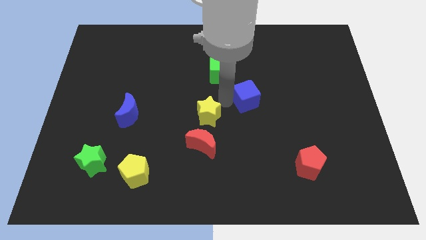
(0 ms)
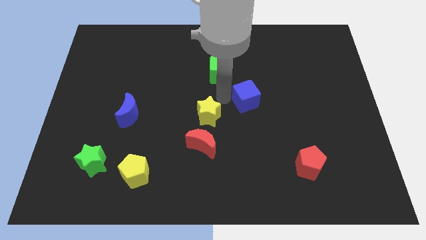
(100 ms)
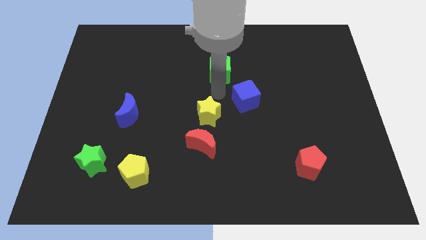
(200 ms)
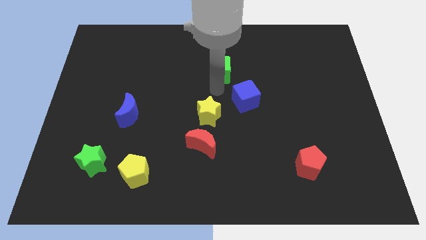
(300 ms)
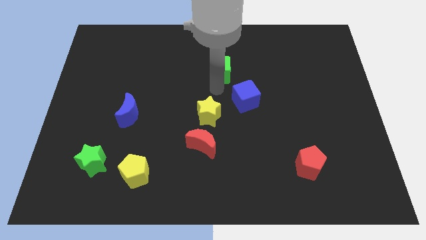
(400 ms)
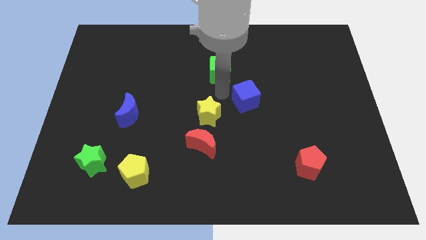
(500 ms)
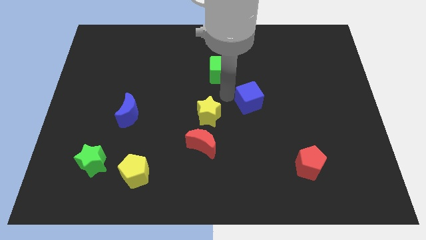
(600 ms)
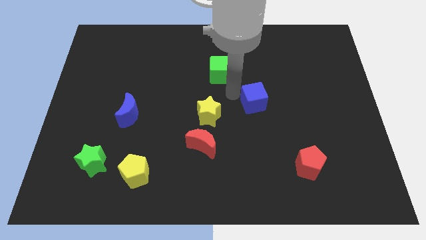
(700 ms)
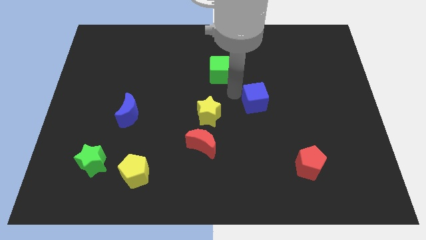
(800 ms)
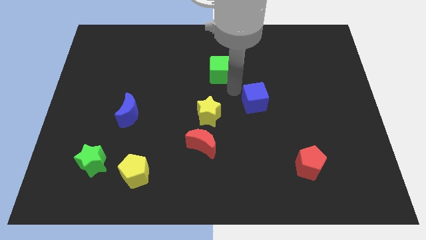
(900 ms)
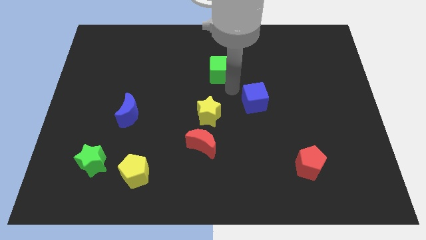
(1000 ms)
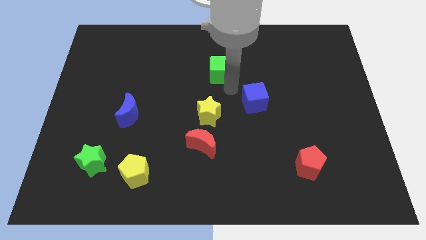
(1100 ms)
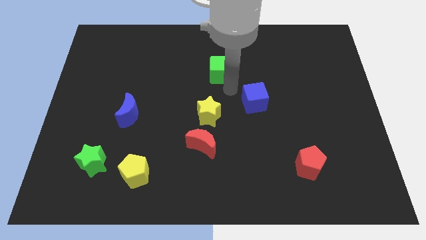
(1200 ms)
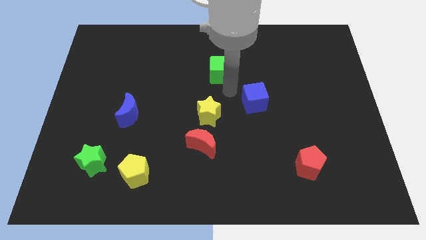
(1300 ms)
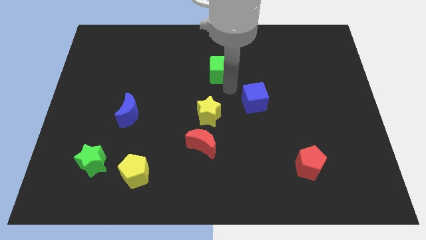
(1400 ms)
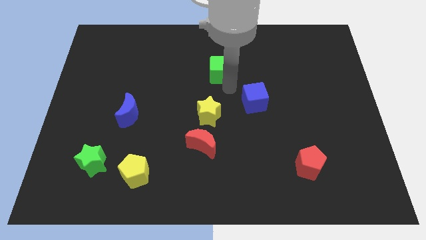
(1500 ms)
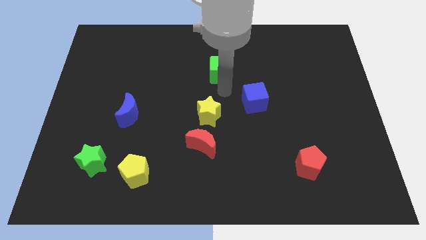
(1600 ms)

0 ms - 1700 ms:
push the blue cube slightly to the right

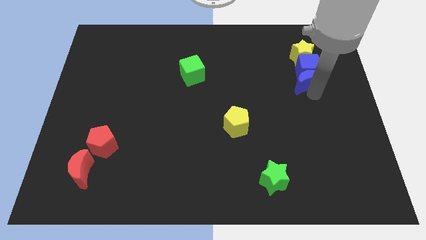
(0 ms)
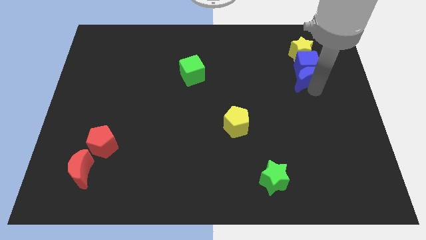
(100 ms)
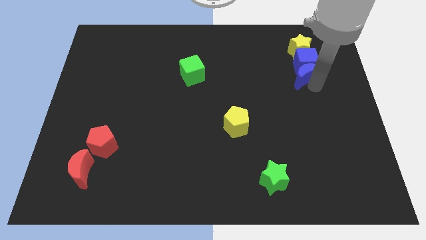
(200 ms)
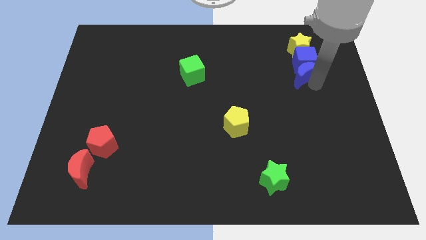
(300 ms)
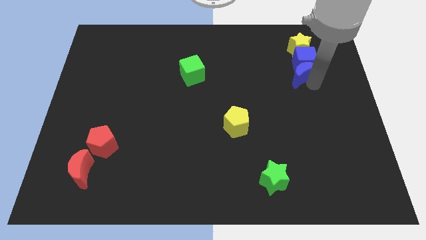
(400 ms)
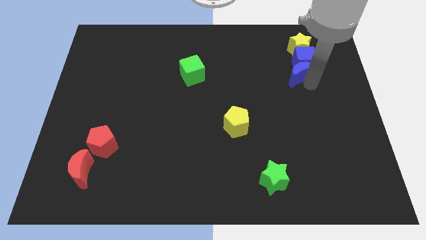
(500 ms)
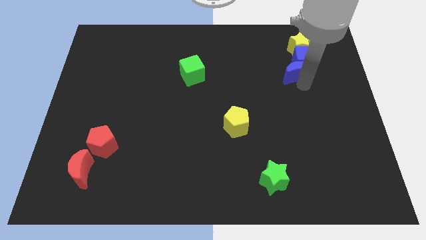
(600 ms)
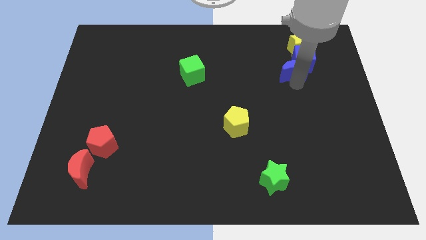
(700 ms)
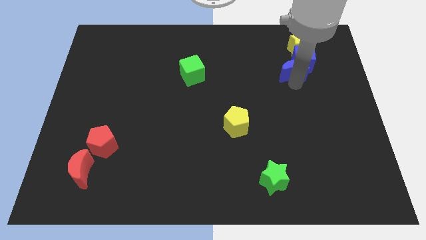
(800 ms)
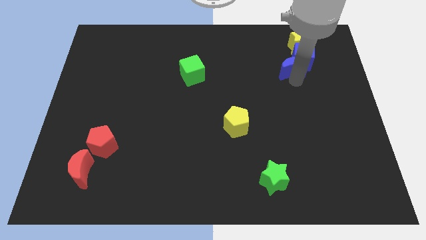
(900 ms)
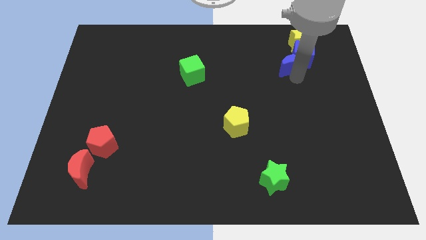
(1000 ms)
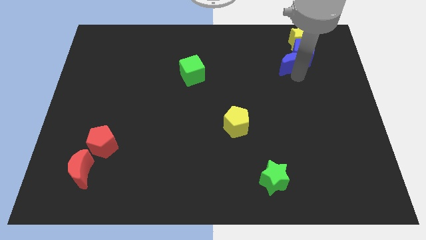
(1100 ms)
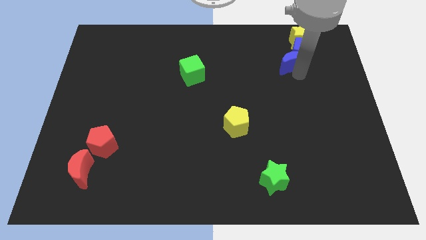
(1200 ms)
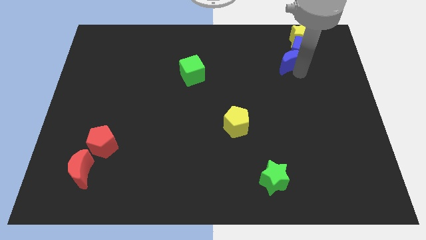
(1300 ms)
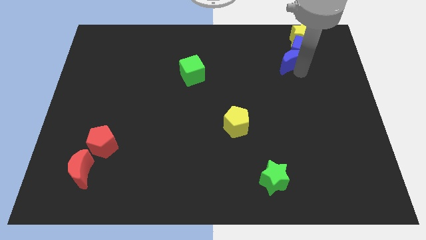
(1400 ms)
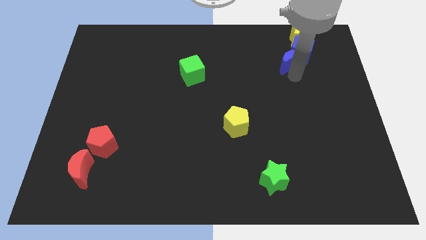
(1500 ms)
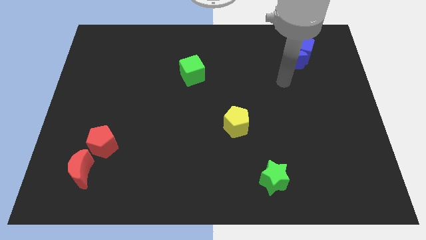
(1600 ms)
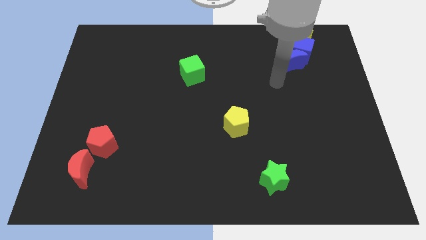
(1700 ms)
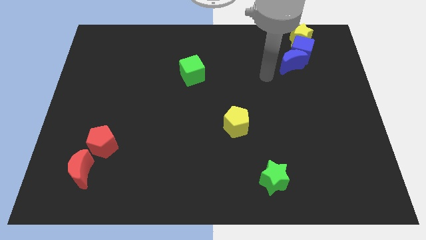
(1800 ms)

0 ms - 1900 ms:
move blue blocks along with yellow star to the top left

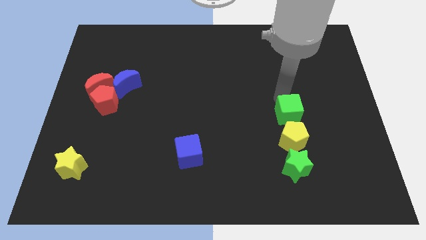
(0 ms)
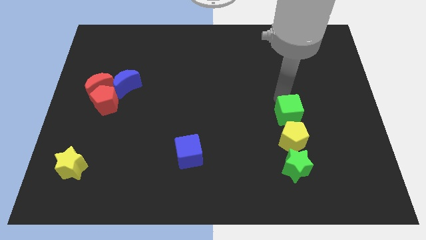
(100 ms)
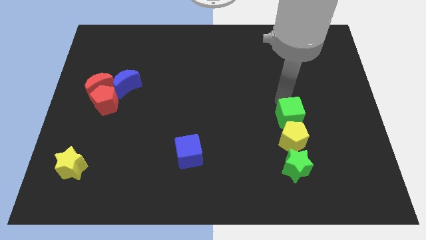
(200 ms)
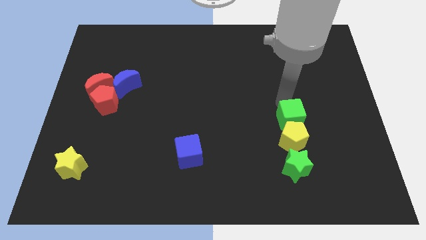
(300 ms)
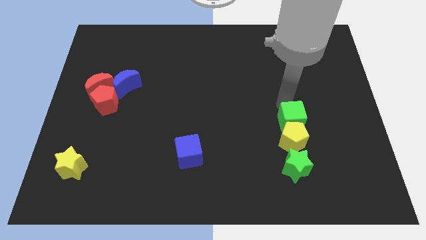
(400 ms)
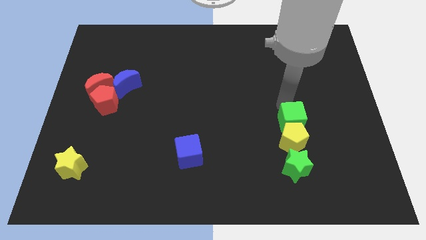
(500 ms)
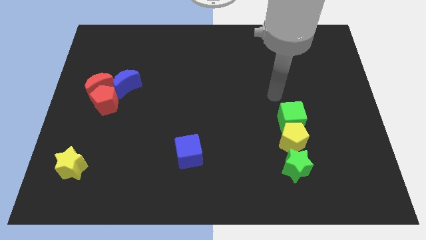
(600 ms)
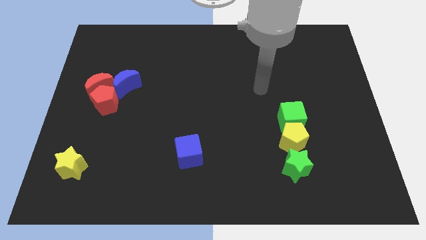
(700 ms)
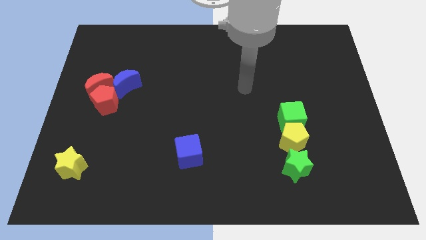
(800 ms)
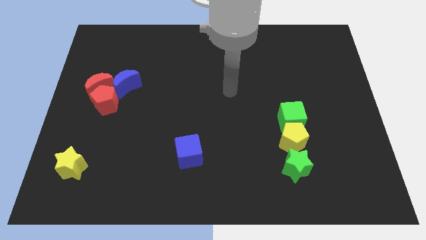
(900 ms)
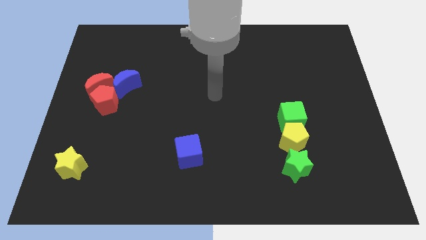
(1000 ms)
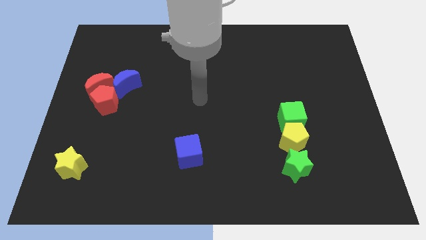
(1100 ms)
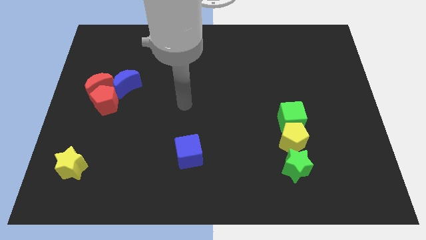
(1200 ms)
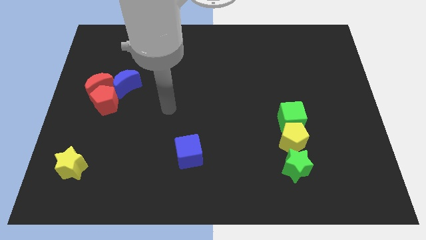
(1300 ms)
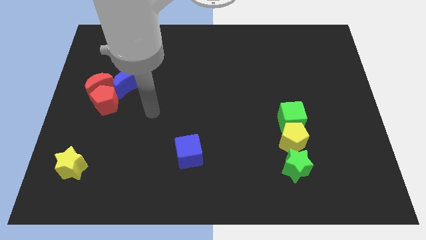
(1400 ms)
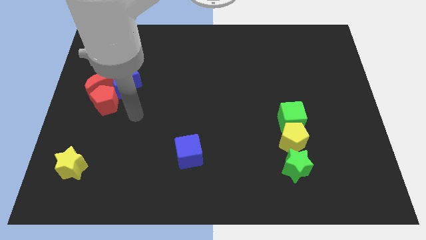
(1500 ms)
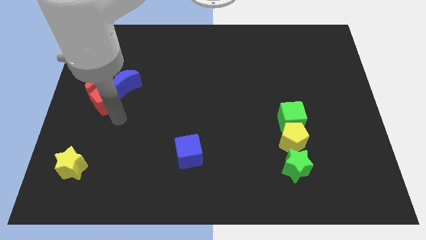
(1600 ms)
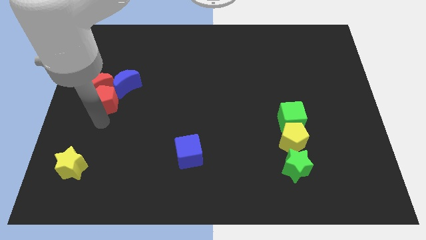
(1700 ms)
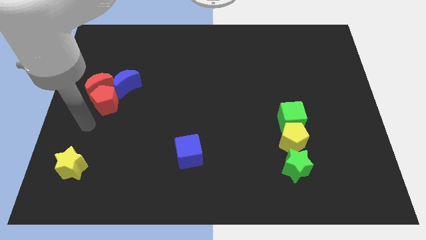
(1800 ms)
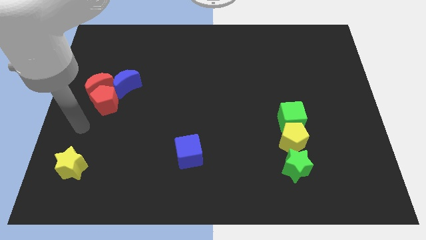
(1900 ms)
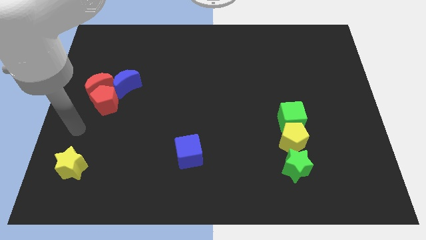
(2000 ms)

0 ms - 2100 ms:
slide the green cube to the yellow pentagon

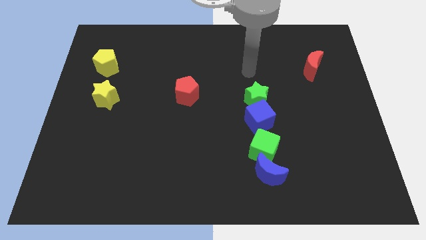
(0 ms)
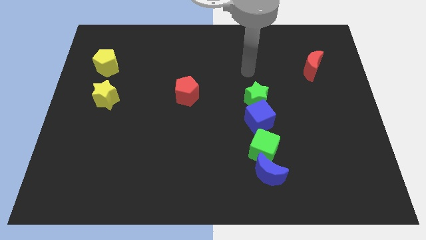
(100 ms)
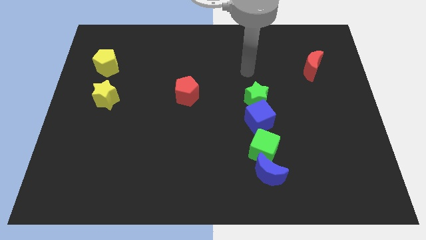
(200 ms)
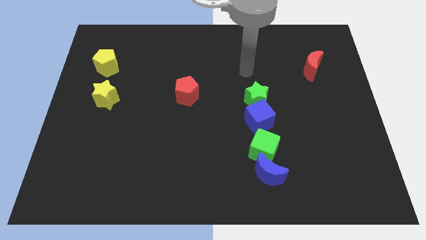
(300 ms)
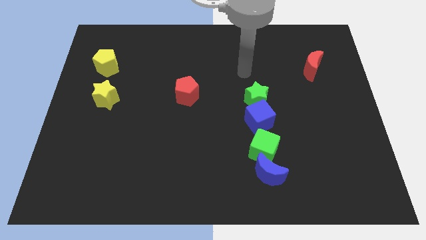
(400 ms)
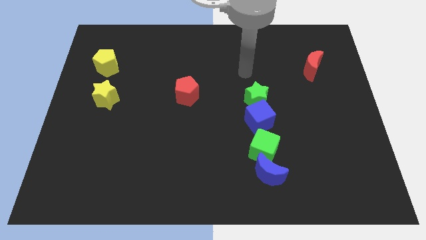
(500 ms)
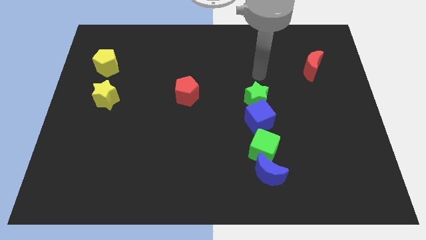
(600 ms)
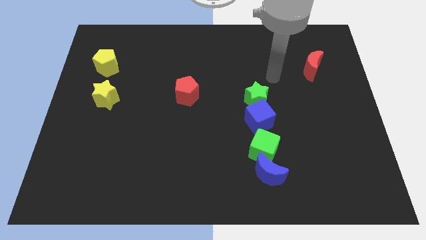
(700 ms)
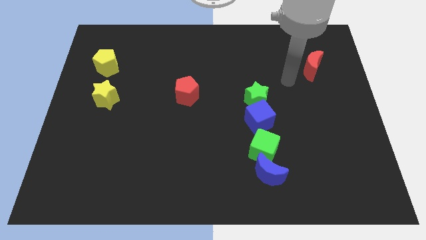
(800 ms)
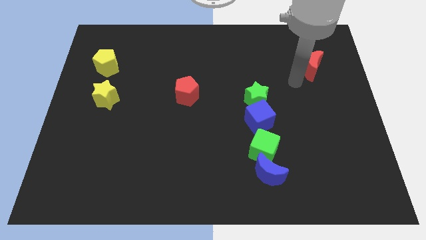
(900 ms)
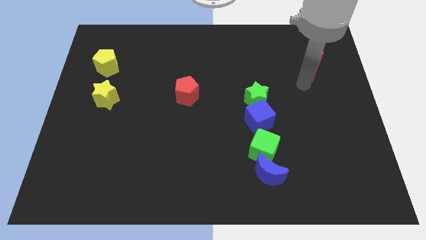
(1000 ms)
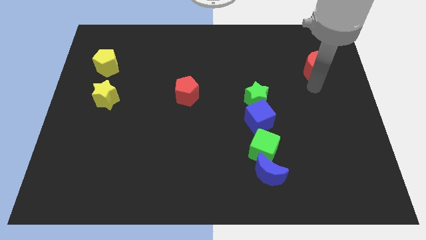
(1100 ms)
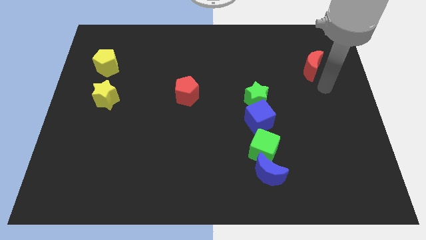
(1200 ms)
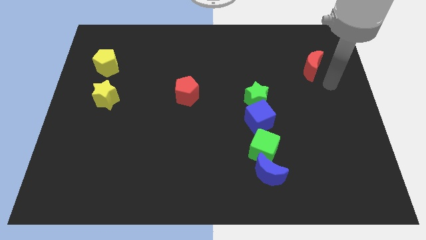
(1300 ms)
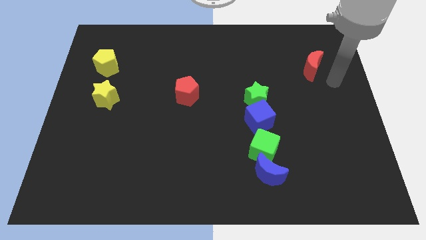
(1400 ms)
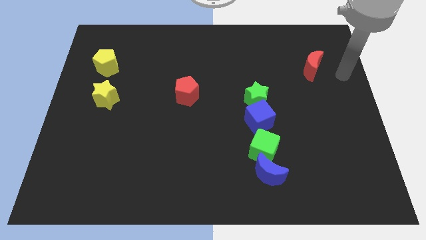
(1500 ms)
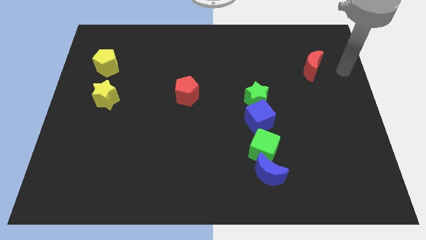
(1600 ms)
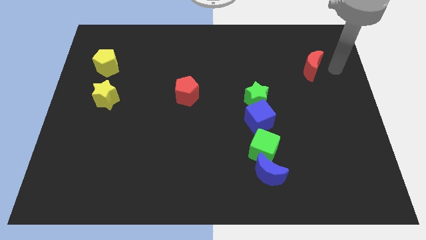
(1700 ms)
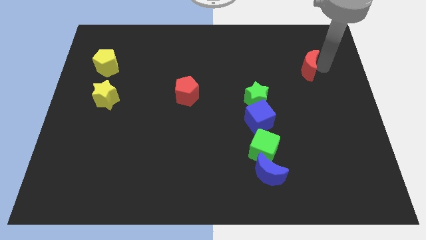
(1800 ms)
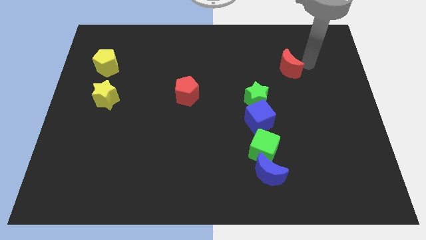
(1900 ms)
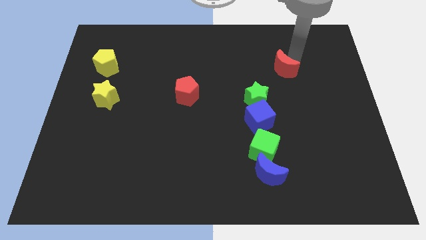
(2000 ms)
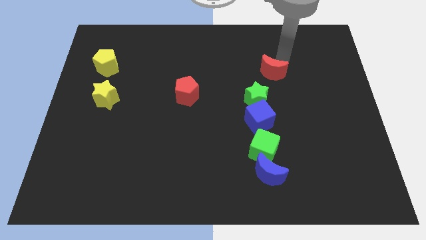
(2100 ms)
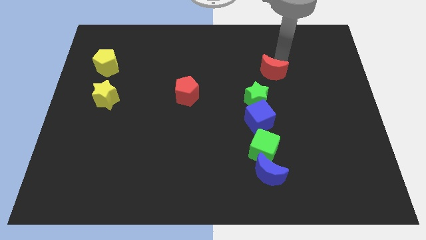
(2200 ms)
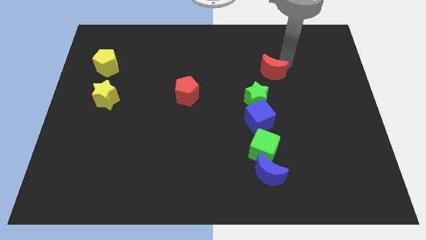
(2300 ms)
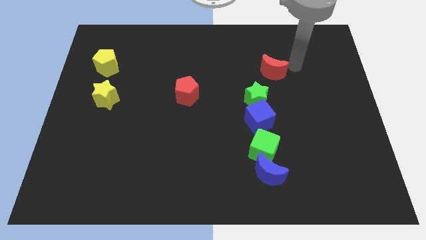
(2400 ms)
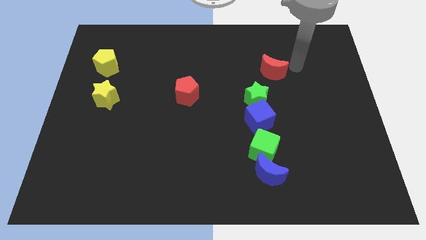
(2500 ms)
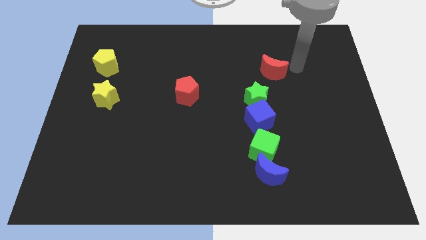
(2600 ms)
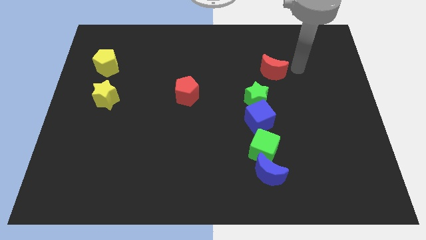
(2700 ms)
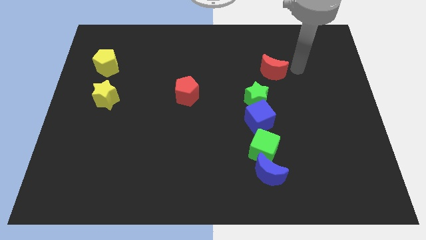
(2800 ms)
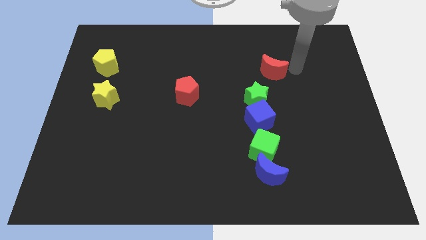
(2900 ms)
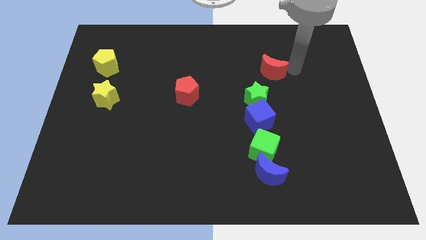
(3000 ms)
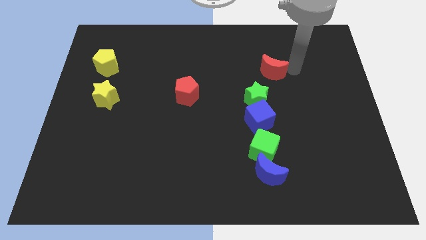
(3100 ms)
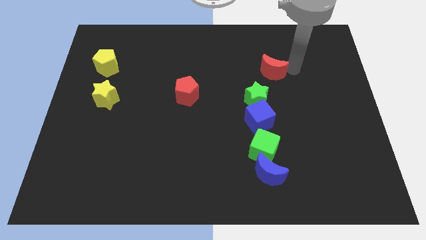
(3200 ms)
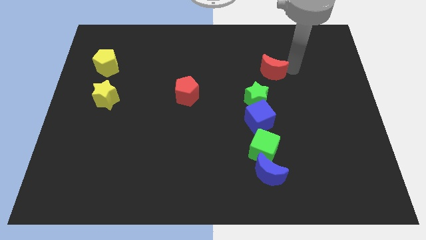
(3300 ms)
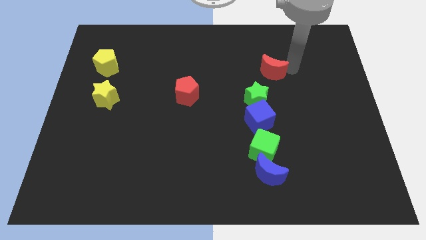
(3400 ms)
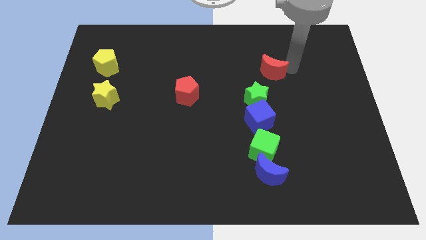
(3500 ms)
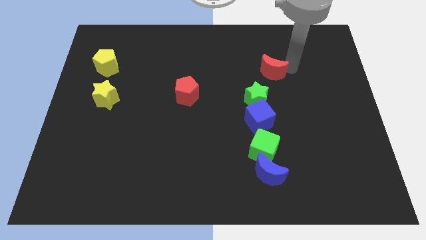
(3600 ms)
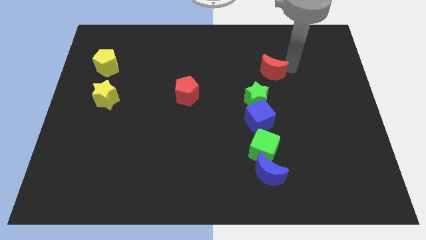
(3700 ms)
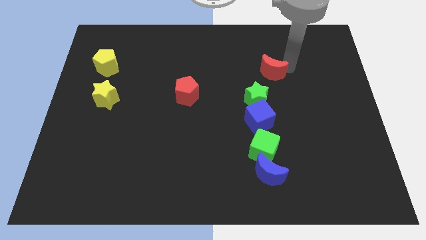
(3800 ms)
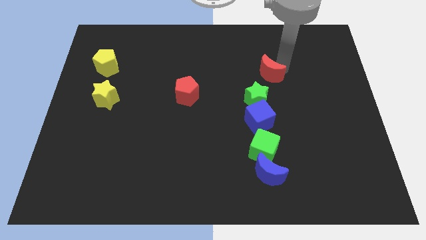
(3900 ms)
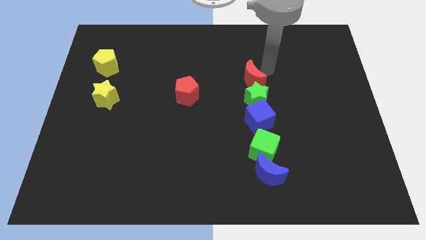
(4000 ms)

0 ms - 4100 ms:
push the red moon vertically above the green star
